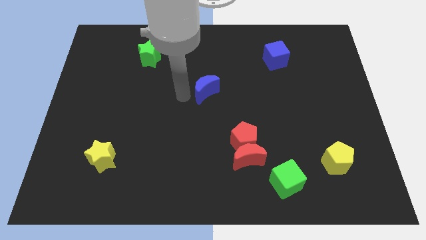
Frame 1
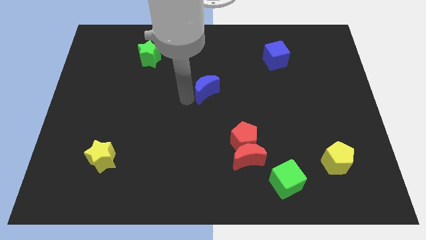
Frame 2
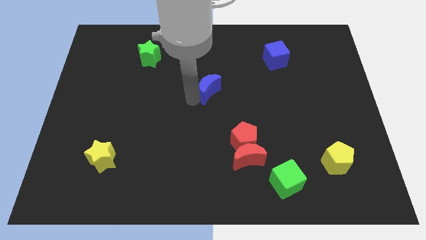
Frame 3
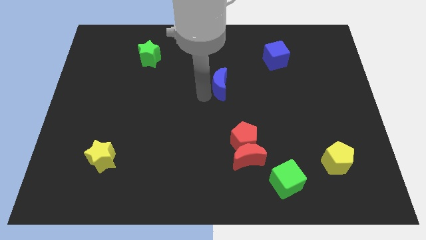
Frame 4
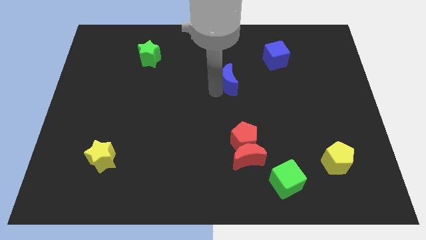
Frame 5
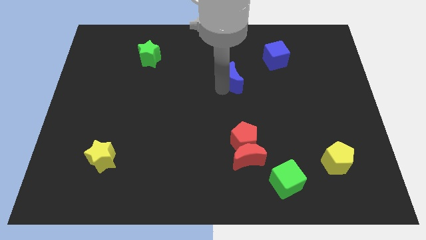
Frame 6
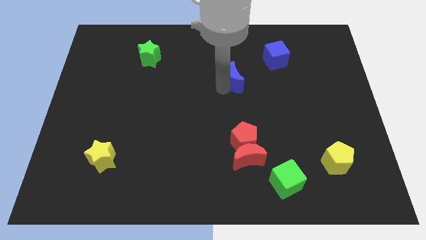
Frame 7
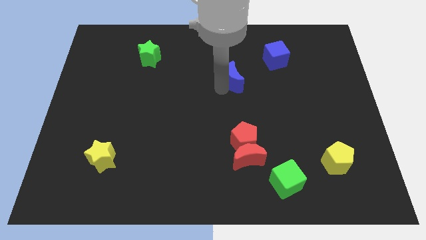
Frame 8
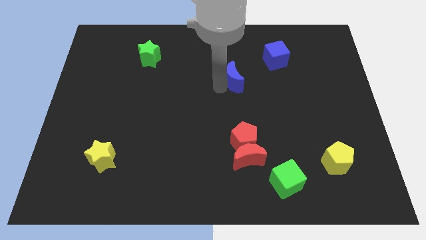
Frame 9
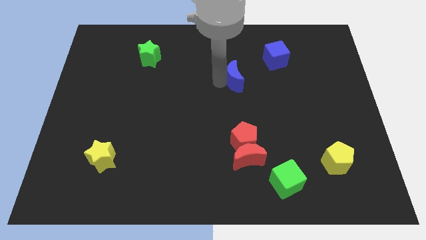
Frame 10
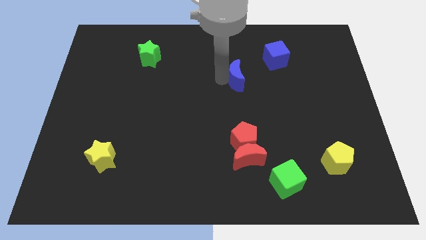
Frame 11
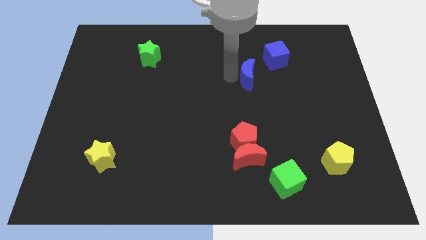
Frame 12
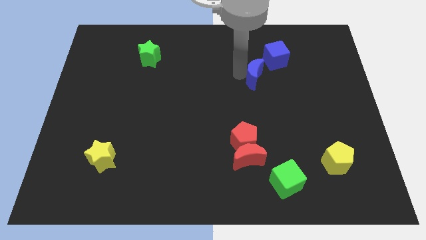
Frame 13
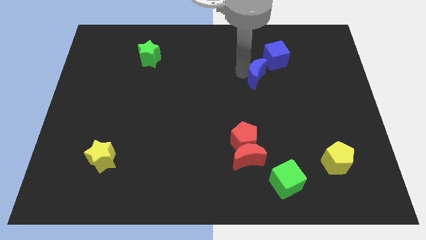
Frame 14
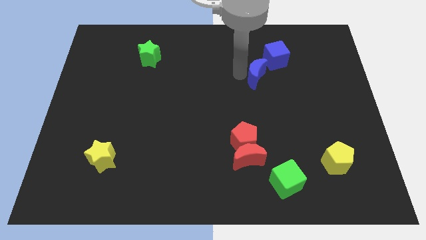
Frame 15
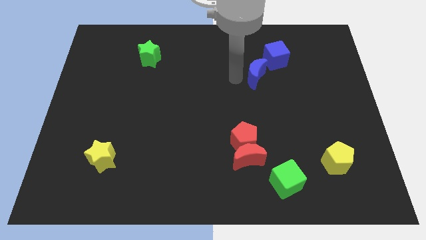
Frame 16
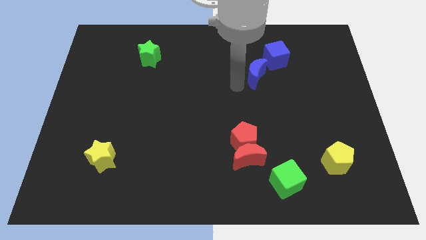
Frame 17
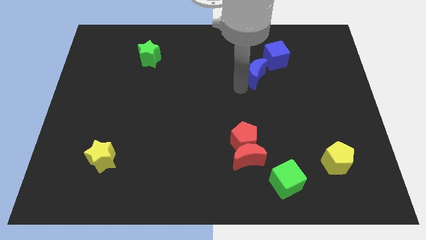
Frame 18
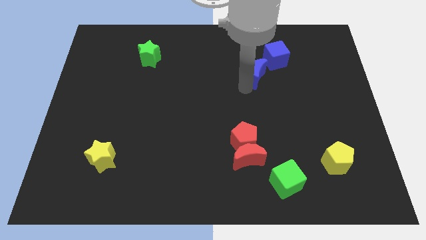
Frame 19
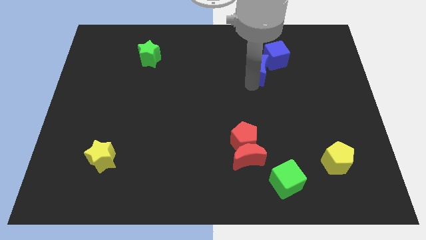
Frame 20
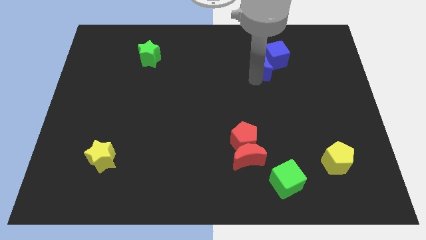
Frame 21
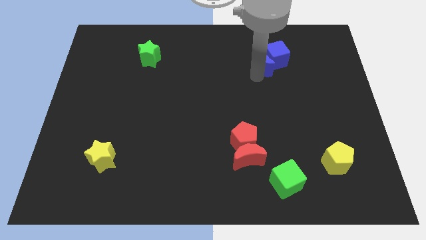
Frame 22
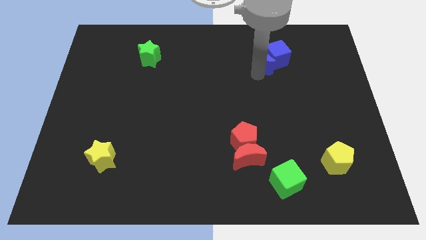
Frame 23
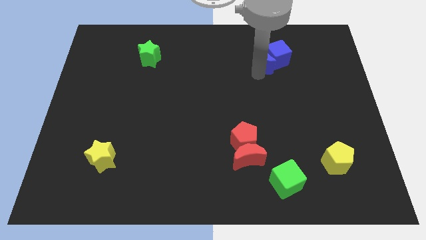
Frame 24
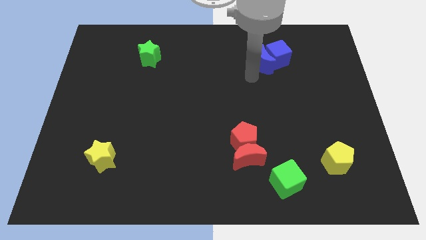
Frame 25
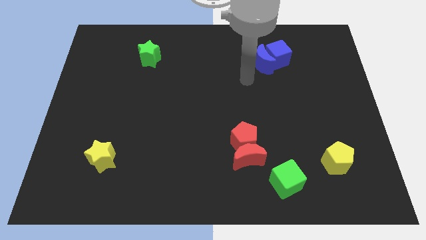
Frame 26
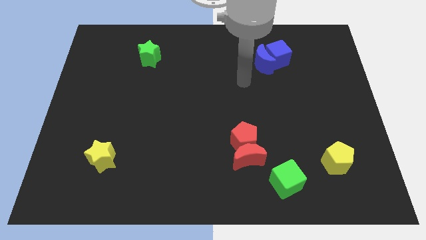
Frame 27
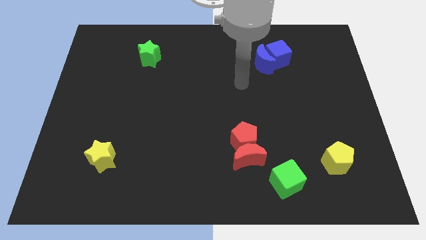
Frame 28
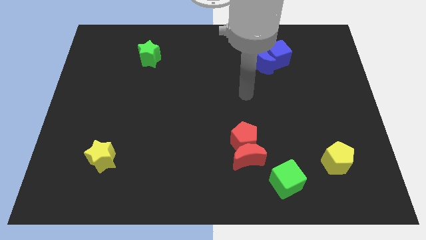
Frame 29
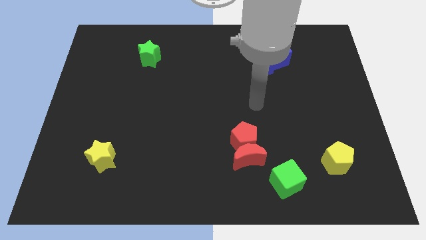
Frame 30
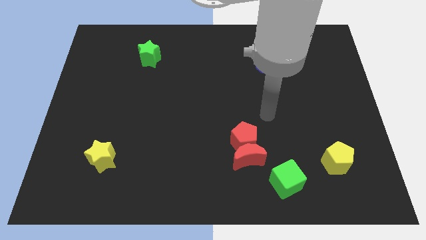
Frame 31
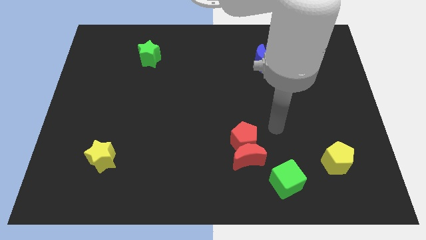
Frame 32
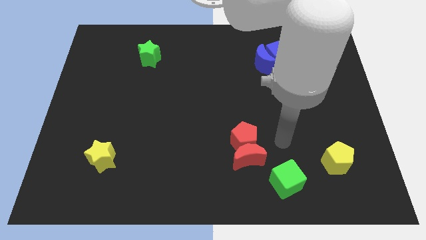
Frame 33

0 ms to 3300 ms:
place the blue moon at the bottom left of the blue cube

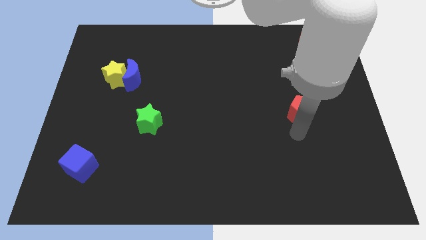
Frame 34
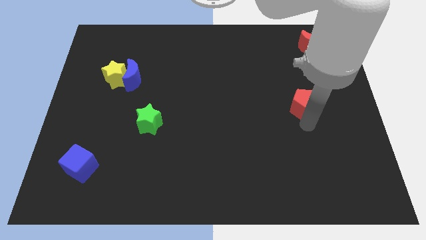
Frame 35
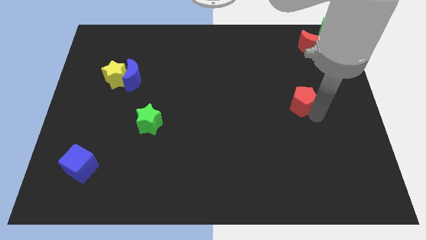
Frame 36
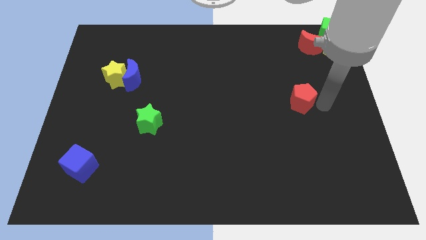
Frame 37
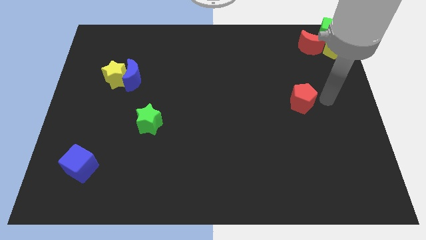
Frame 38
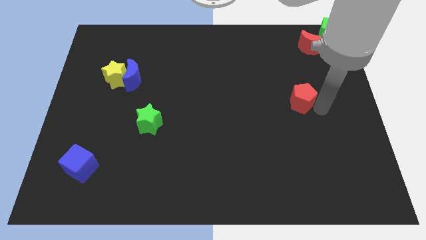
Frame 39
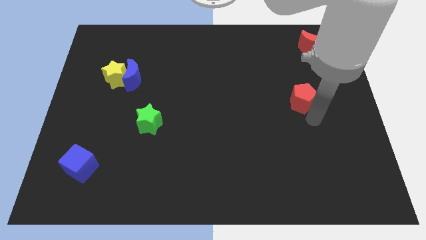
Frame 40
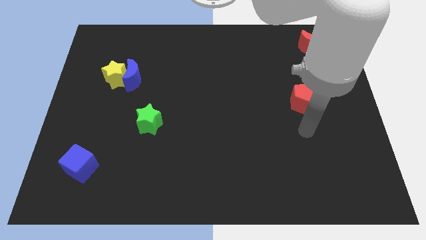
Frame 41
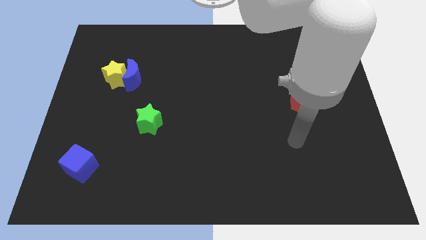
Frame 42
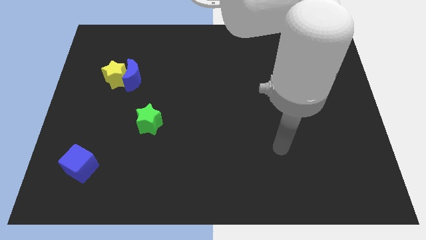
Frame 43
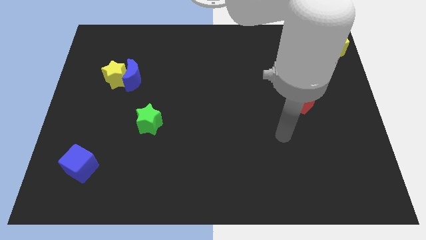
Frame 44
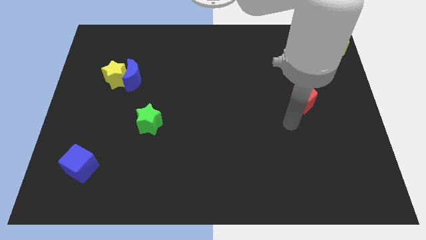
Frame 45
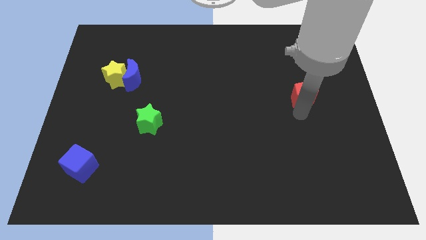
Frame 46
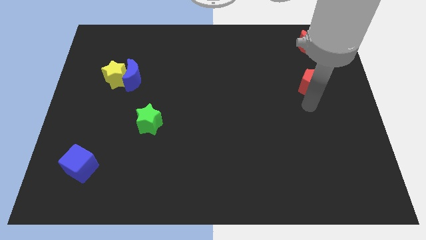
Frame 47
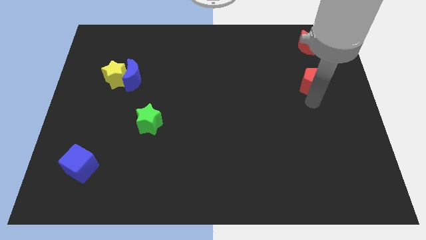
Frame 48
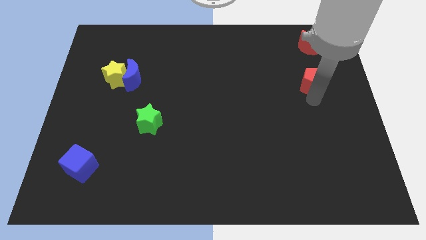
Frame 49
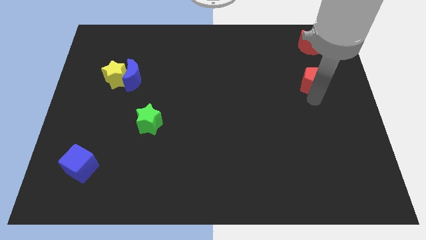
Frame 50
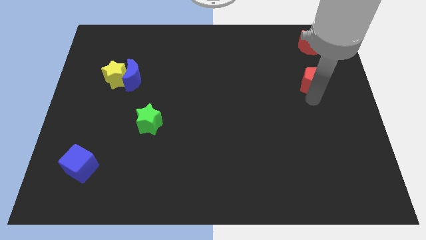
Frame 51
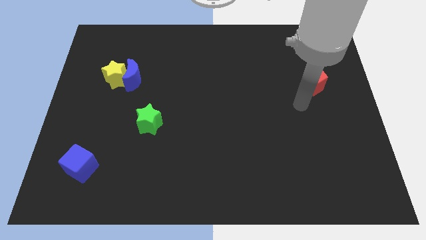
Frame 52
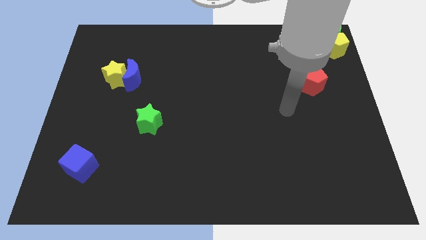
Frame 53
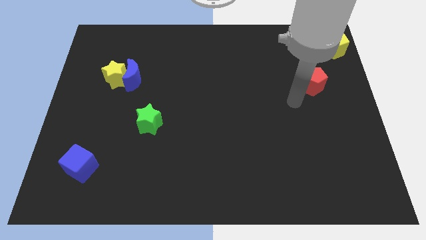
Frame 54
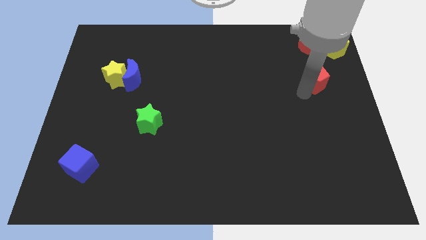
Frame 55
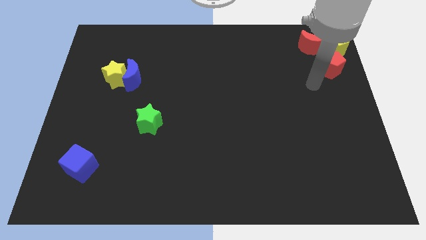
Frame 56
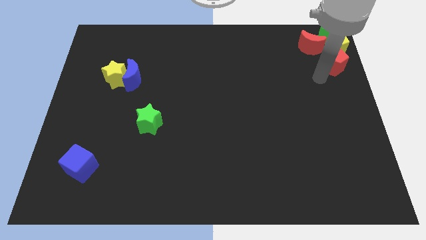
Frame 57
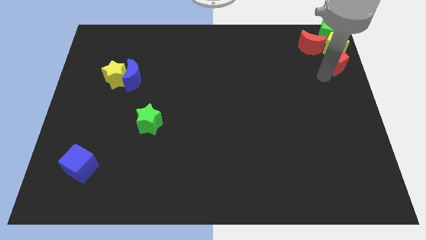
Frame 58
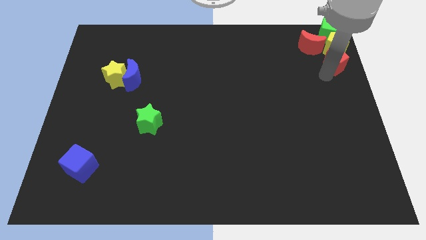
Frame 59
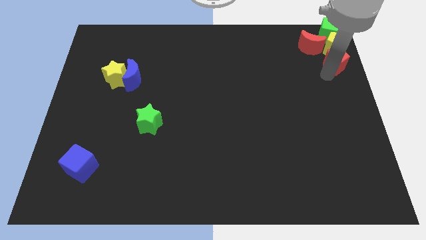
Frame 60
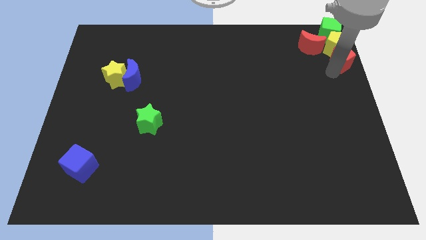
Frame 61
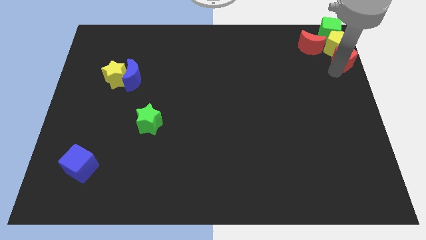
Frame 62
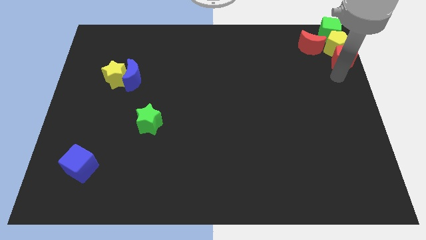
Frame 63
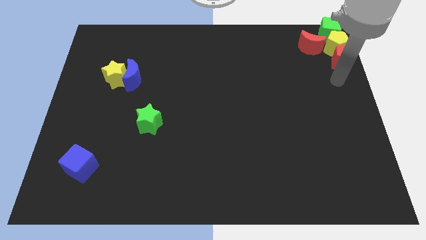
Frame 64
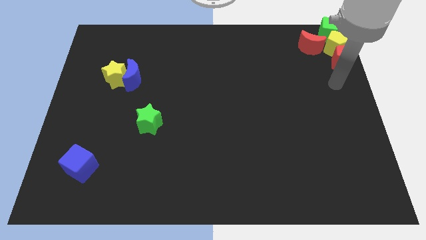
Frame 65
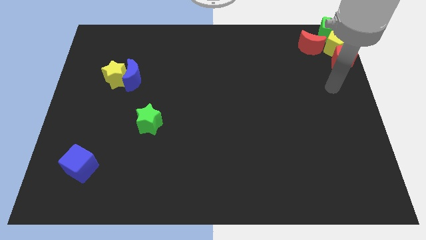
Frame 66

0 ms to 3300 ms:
move the red pentagon into the bottom side of the yellow pentagon

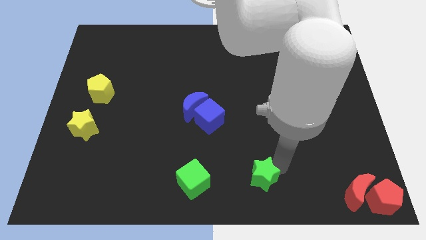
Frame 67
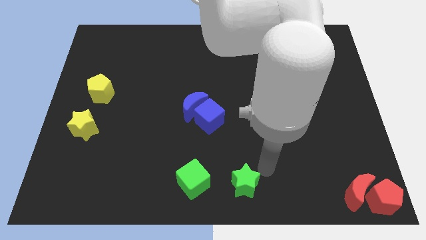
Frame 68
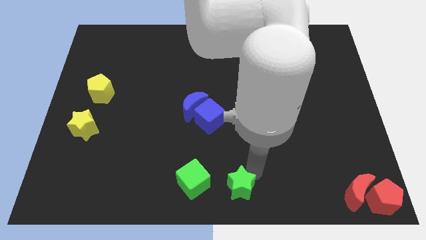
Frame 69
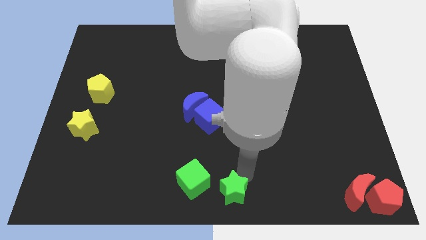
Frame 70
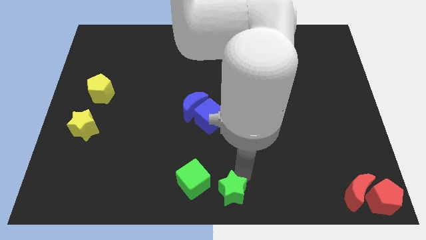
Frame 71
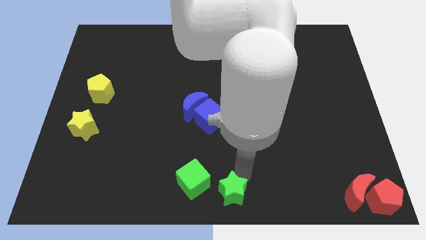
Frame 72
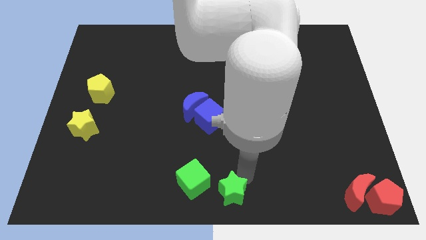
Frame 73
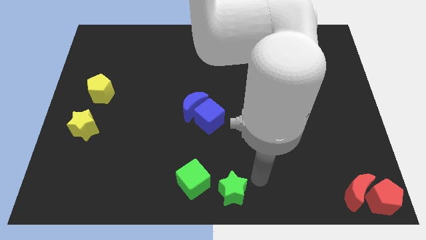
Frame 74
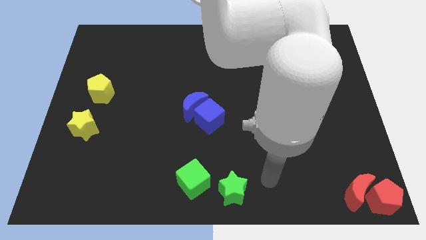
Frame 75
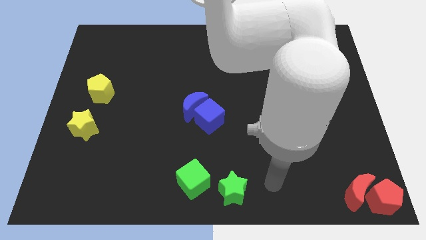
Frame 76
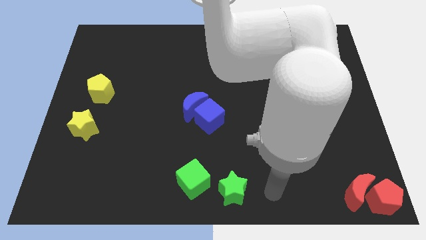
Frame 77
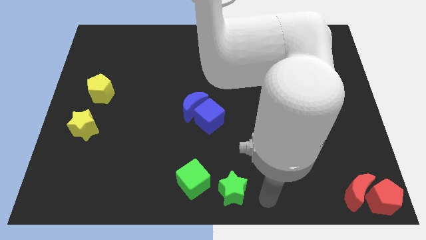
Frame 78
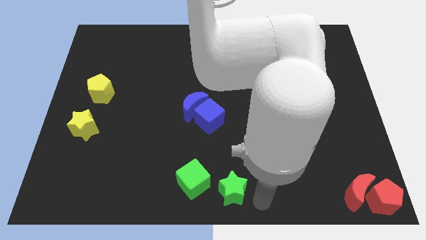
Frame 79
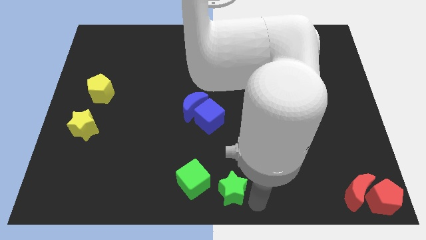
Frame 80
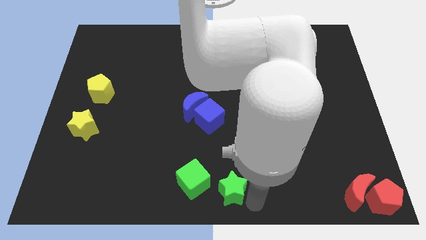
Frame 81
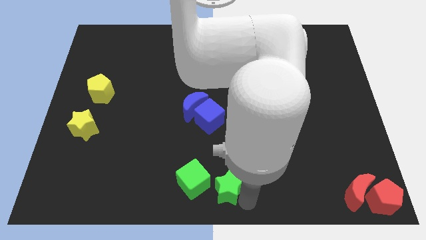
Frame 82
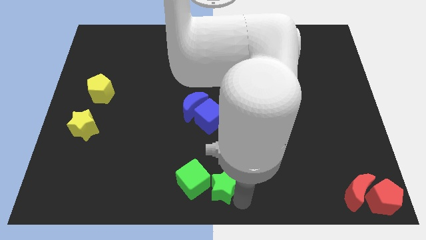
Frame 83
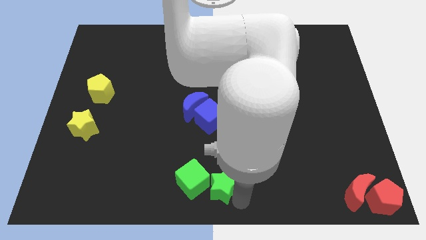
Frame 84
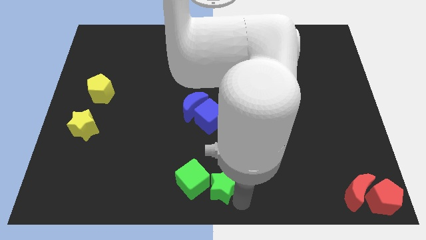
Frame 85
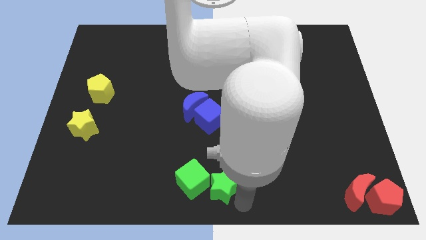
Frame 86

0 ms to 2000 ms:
place green star on right side of the green cube

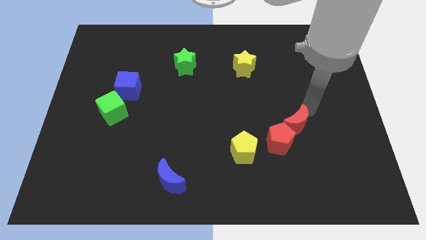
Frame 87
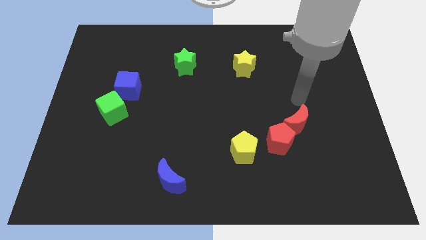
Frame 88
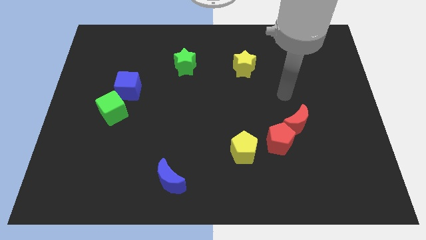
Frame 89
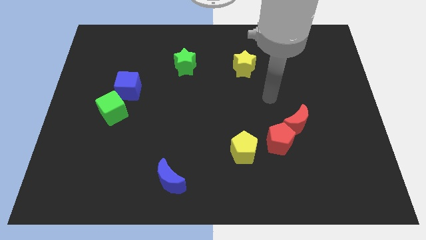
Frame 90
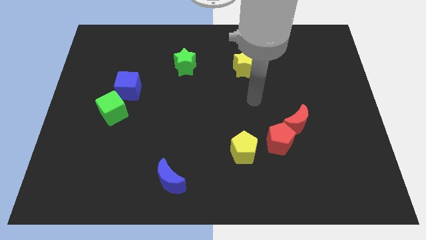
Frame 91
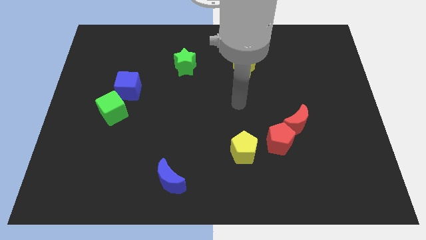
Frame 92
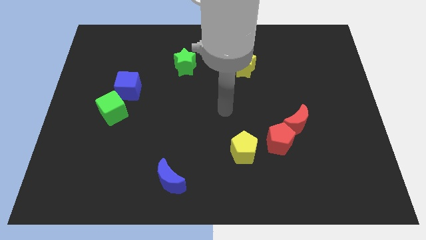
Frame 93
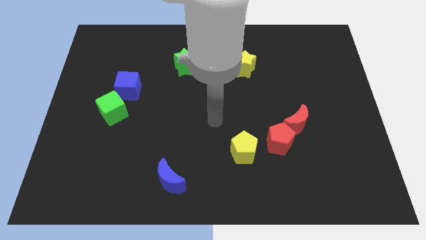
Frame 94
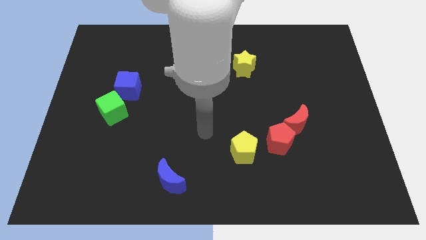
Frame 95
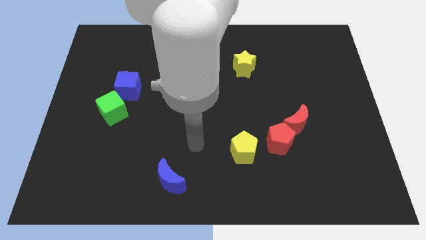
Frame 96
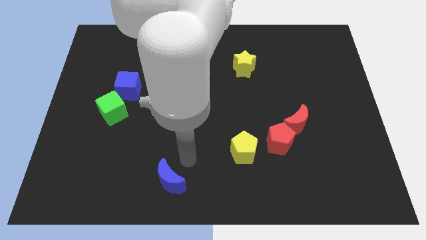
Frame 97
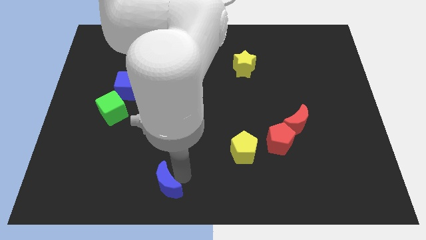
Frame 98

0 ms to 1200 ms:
tap the blue crescent
